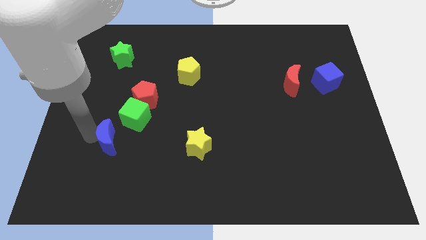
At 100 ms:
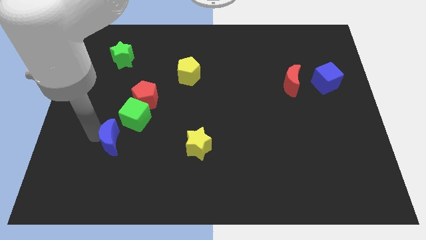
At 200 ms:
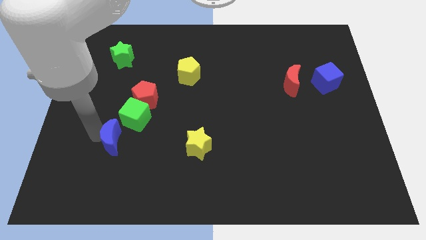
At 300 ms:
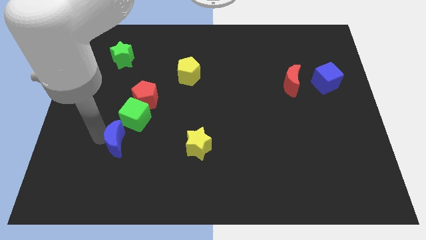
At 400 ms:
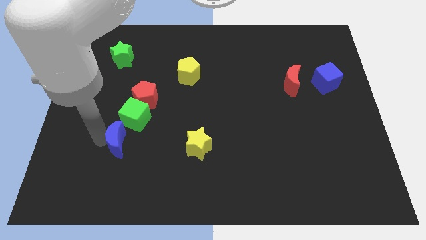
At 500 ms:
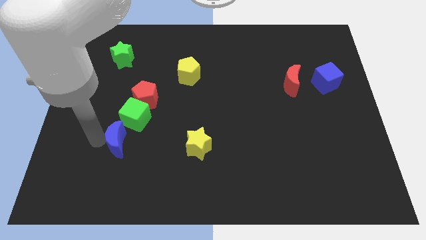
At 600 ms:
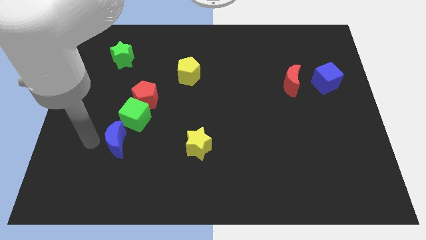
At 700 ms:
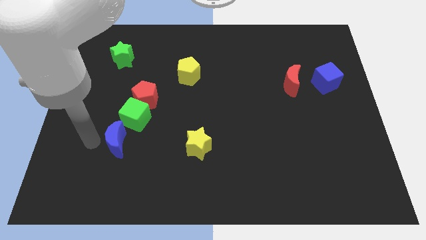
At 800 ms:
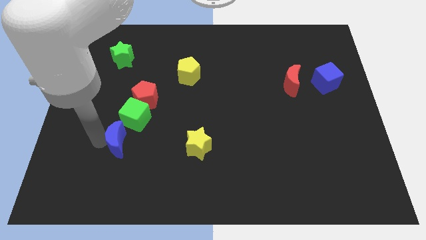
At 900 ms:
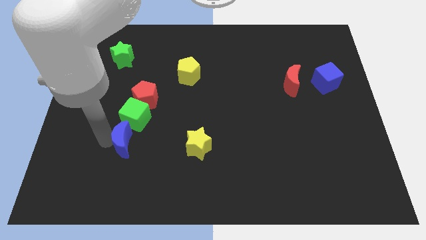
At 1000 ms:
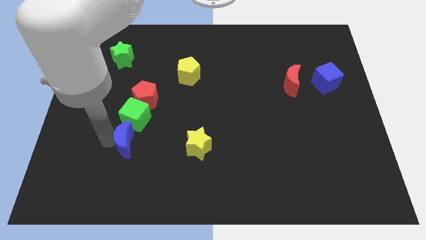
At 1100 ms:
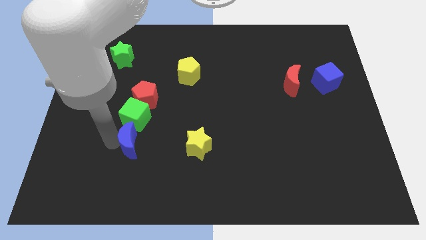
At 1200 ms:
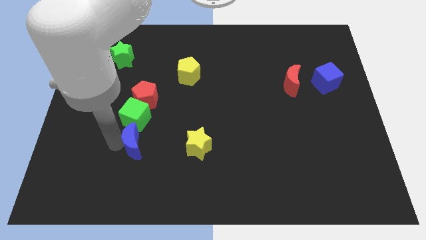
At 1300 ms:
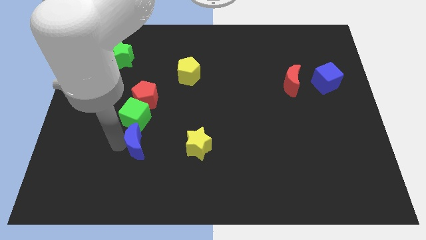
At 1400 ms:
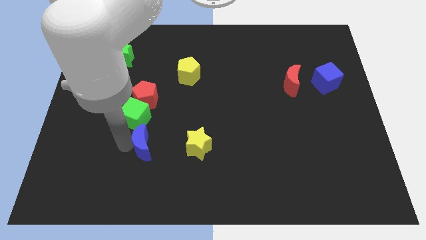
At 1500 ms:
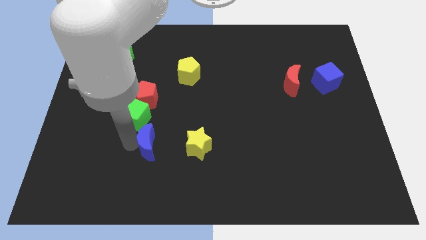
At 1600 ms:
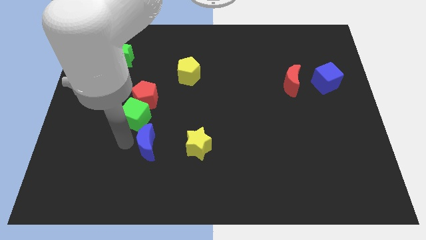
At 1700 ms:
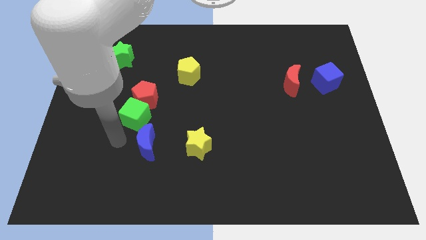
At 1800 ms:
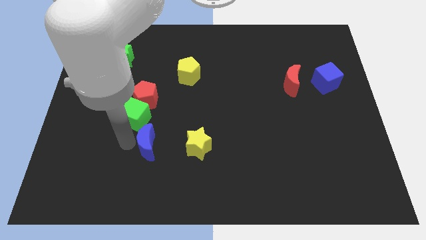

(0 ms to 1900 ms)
push the blue moon towards the yellow star

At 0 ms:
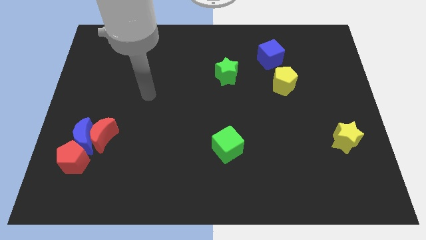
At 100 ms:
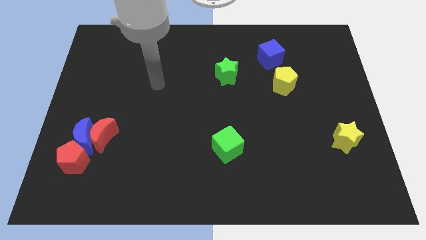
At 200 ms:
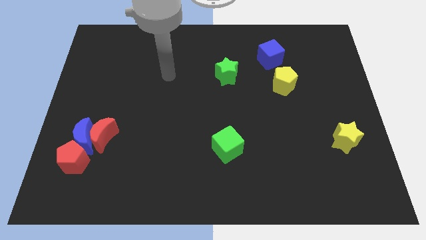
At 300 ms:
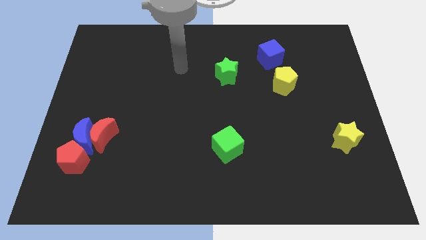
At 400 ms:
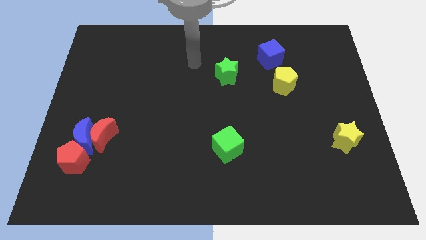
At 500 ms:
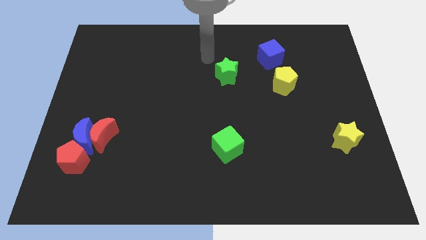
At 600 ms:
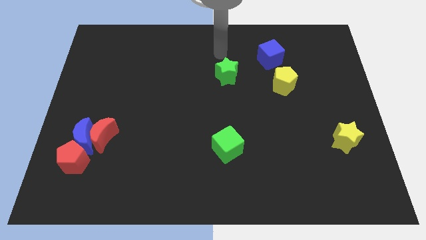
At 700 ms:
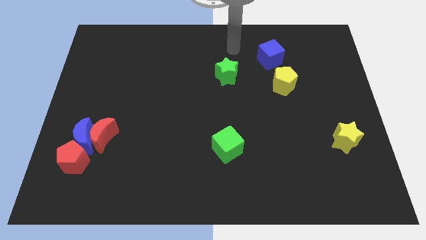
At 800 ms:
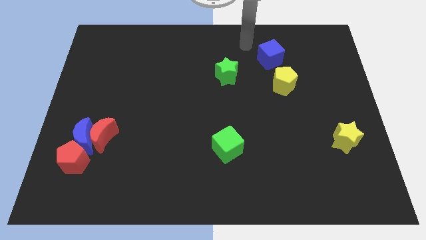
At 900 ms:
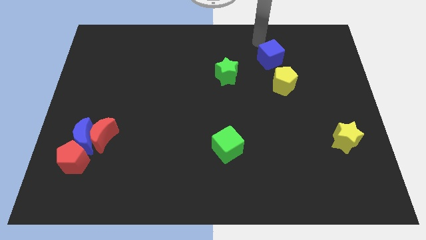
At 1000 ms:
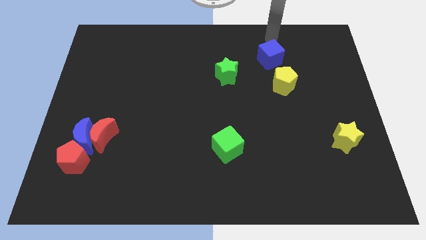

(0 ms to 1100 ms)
point your arm at the top side of the blue cube

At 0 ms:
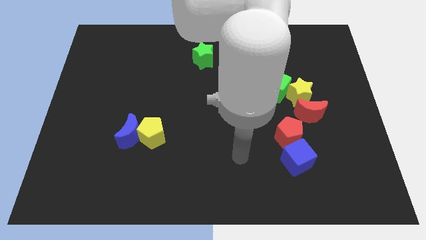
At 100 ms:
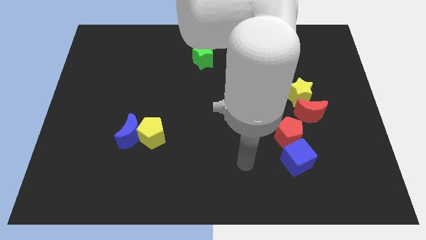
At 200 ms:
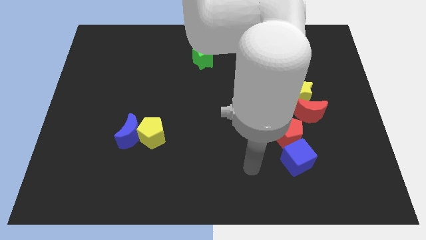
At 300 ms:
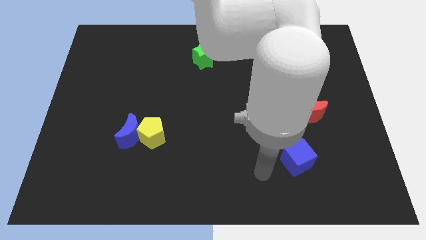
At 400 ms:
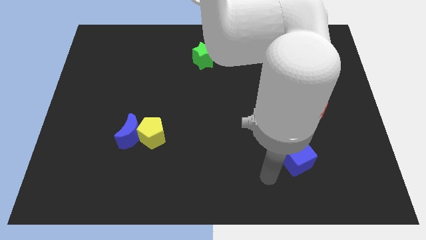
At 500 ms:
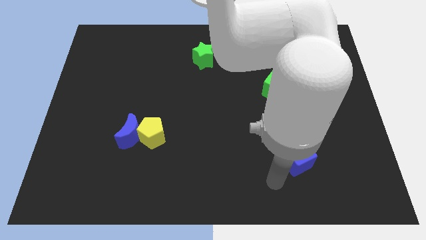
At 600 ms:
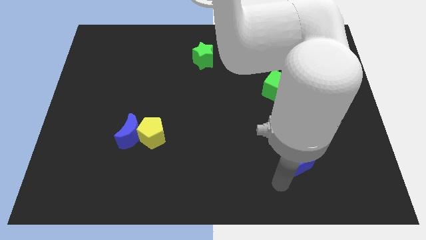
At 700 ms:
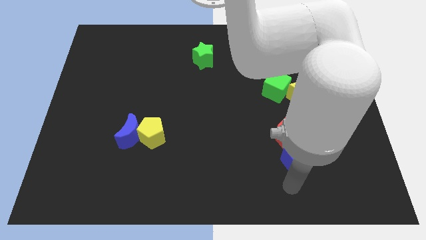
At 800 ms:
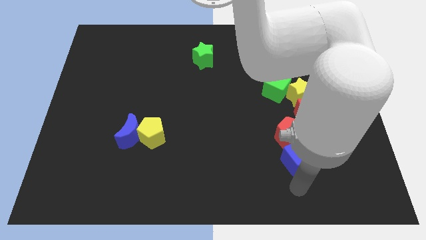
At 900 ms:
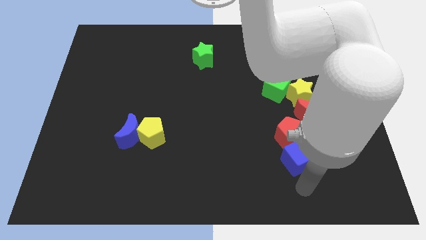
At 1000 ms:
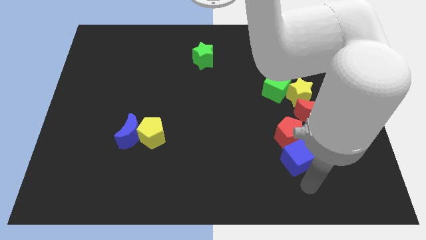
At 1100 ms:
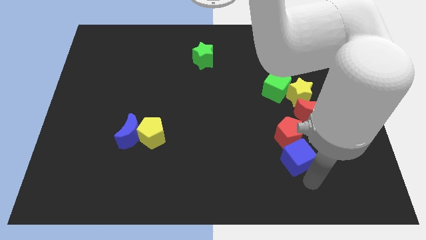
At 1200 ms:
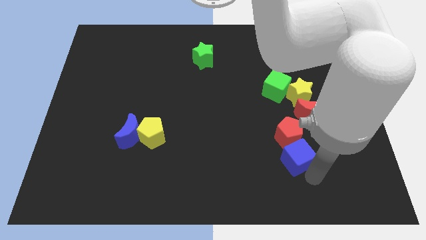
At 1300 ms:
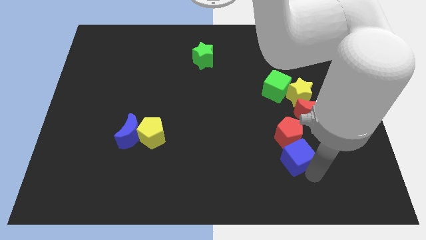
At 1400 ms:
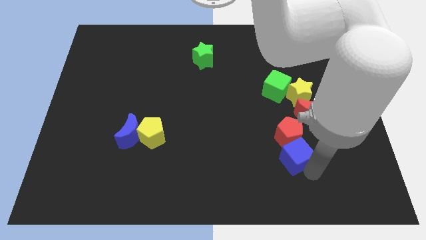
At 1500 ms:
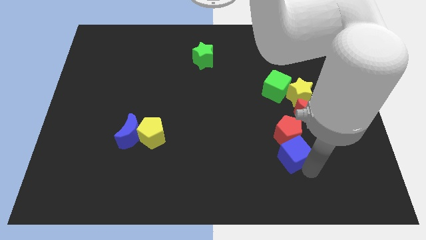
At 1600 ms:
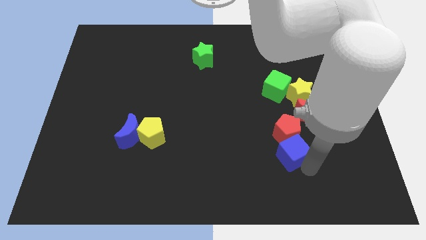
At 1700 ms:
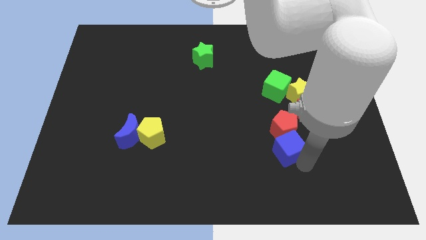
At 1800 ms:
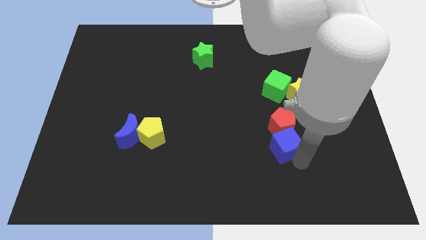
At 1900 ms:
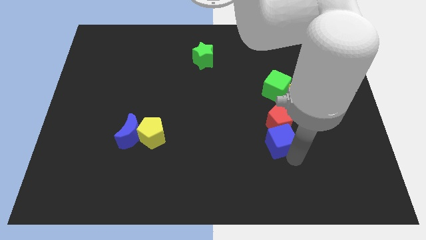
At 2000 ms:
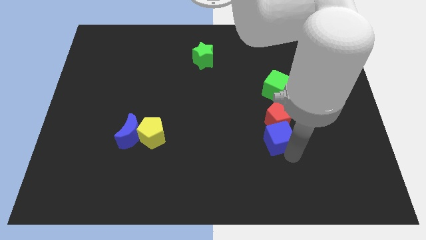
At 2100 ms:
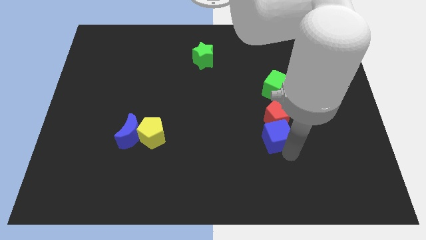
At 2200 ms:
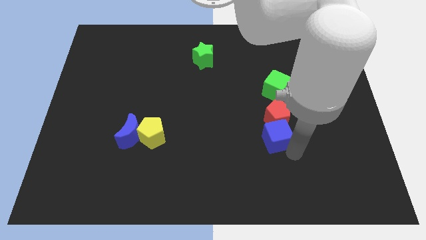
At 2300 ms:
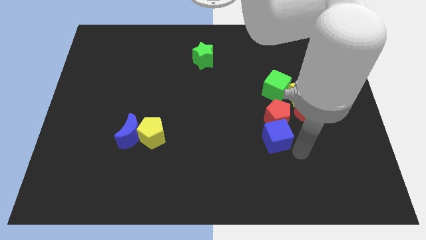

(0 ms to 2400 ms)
place blue cube and red pentagon below the green cube

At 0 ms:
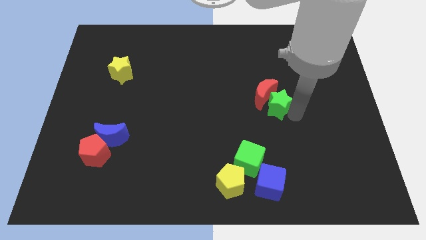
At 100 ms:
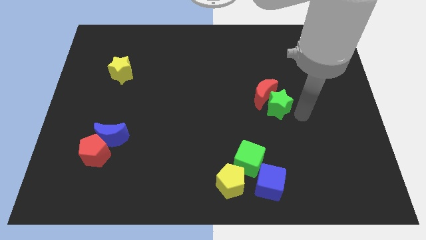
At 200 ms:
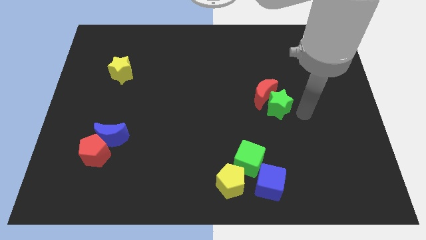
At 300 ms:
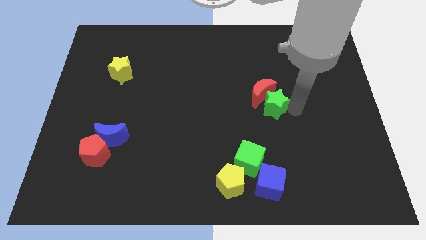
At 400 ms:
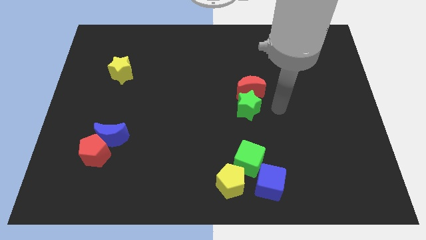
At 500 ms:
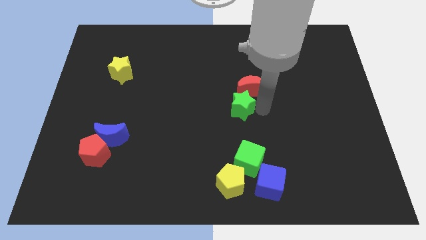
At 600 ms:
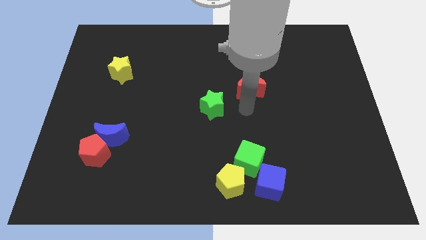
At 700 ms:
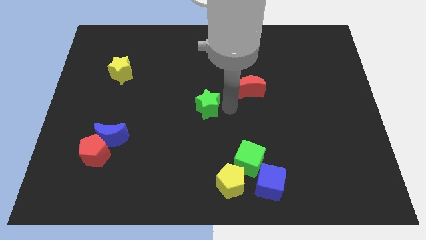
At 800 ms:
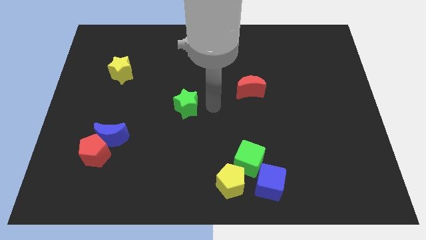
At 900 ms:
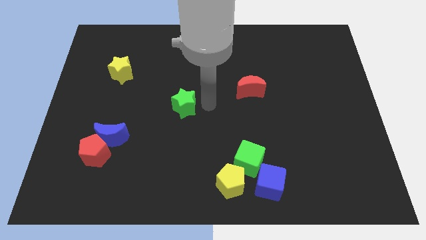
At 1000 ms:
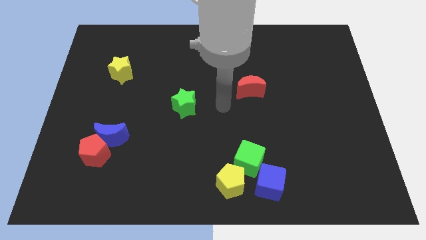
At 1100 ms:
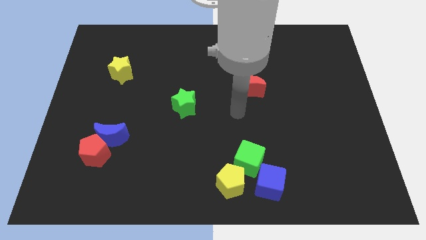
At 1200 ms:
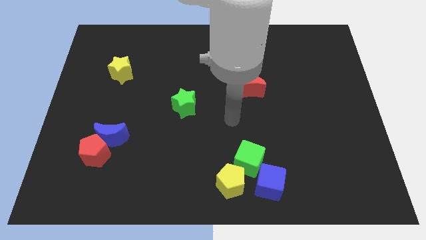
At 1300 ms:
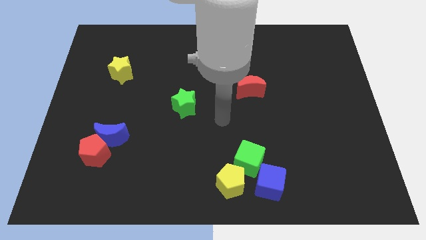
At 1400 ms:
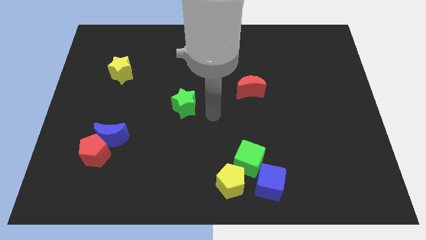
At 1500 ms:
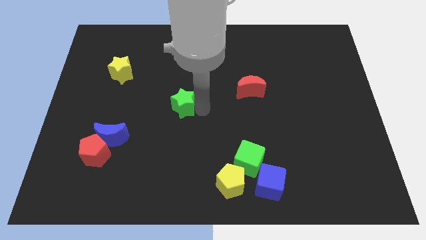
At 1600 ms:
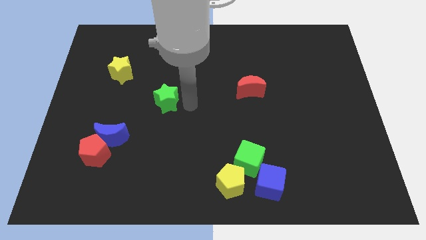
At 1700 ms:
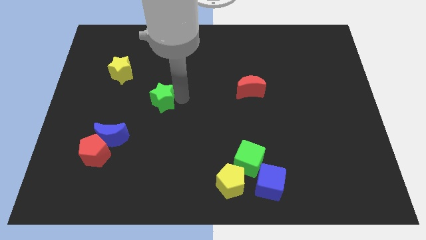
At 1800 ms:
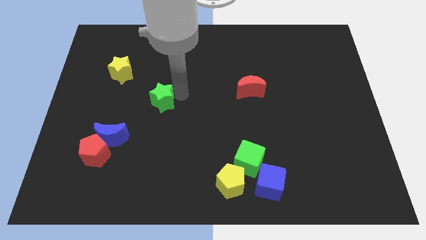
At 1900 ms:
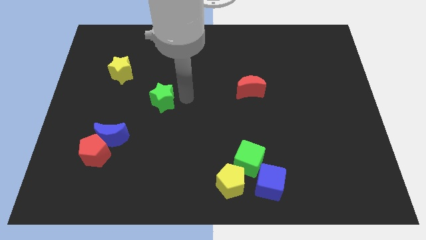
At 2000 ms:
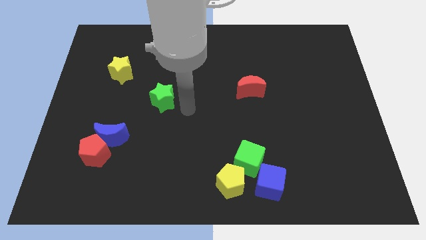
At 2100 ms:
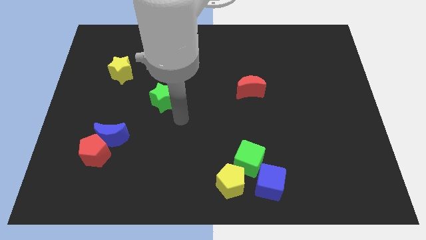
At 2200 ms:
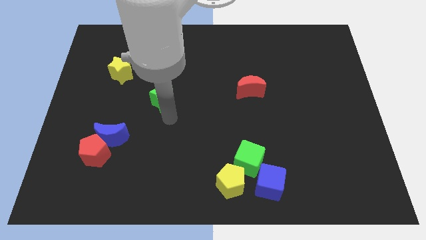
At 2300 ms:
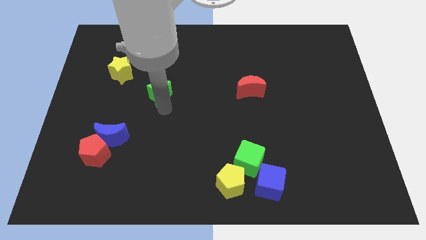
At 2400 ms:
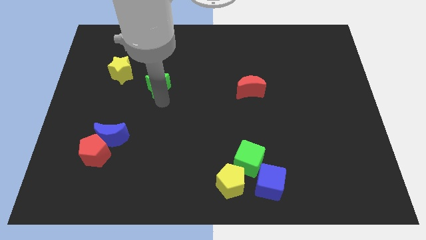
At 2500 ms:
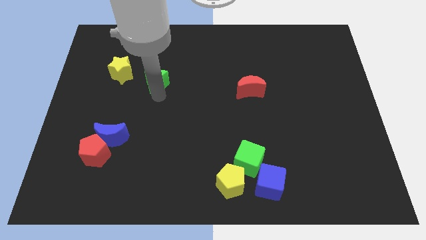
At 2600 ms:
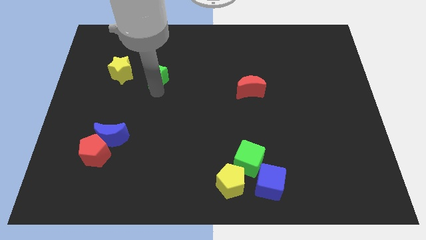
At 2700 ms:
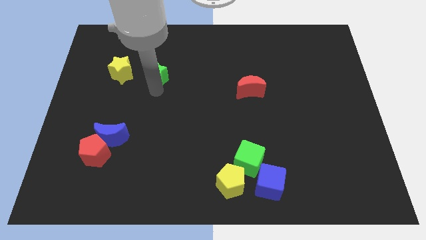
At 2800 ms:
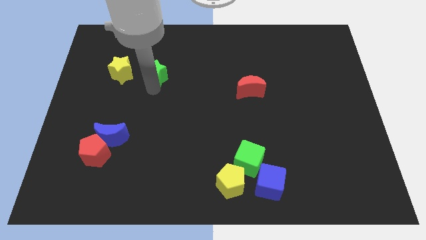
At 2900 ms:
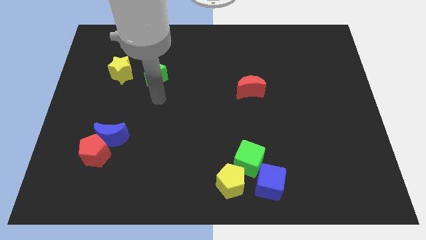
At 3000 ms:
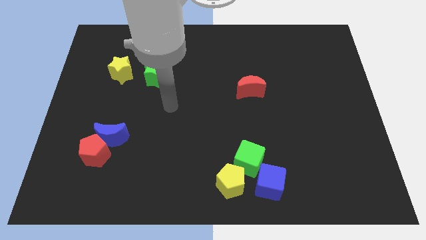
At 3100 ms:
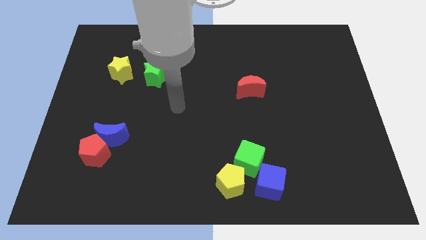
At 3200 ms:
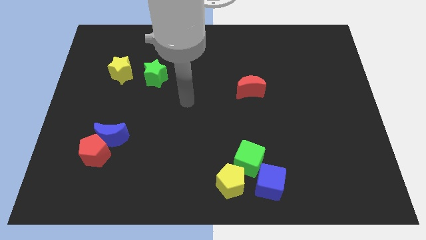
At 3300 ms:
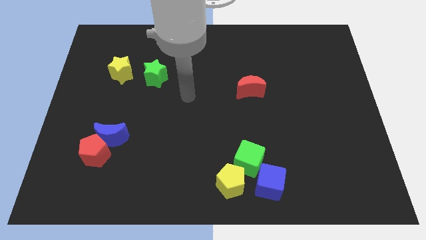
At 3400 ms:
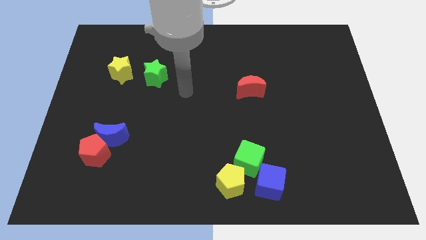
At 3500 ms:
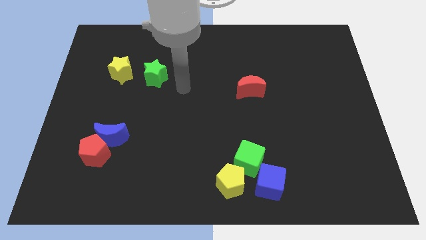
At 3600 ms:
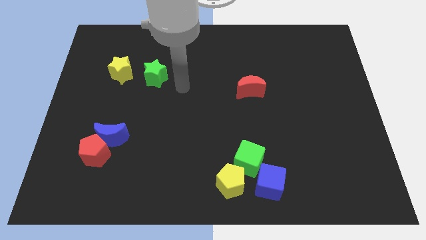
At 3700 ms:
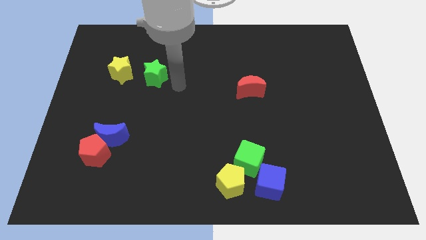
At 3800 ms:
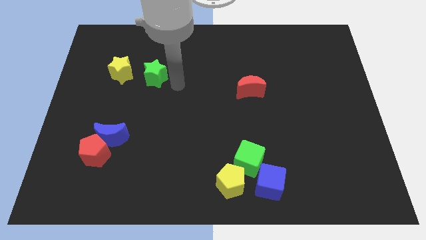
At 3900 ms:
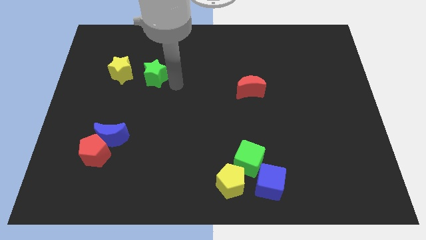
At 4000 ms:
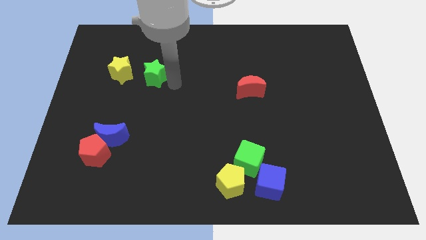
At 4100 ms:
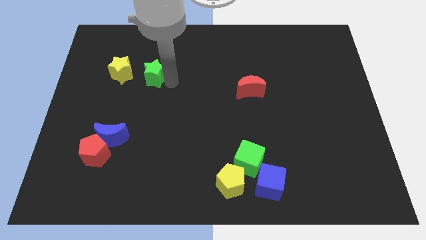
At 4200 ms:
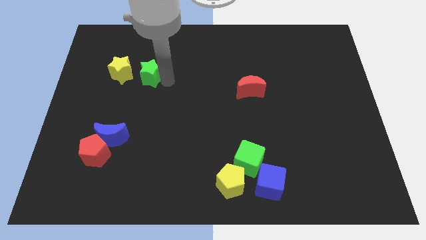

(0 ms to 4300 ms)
separate the green star from the red moon
